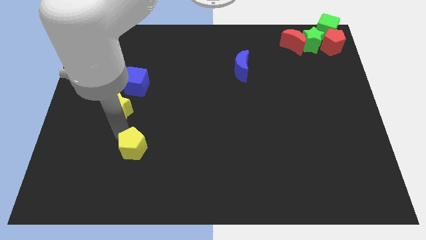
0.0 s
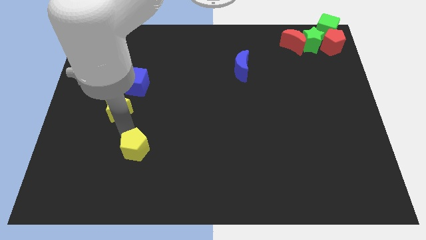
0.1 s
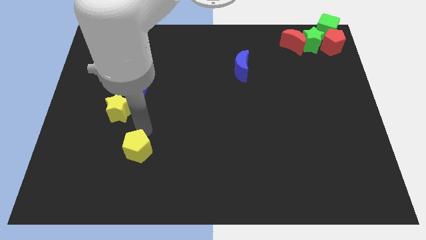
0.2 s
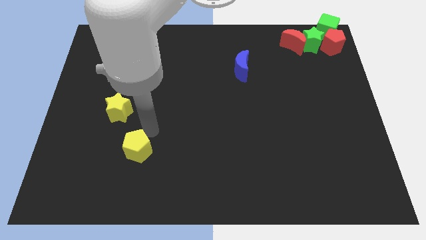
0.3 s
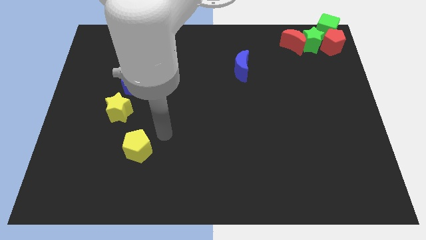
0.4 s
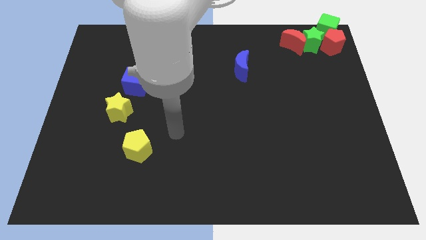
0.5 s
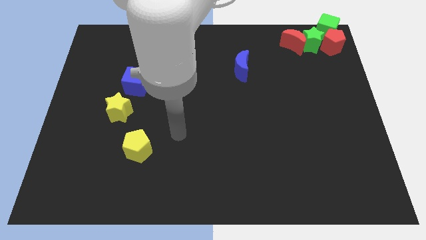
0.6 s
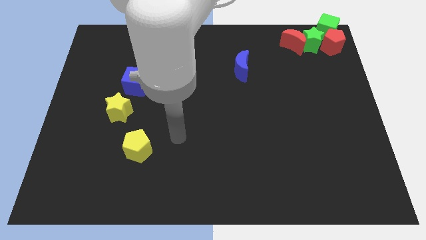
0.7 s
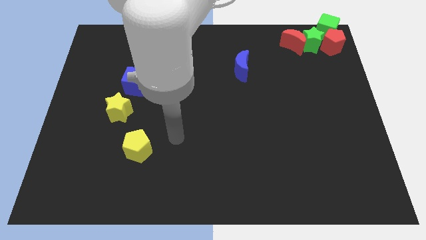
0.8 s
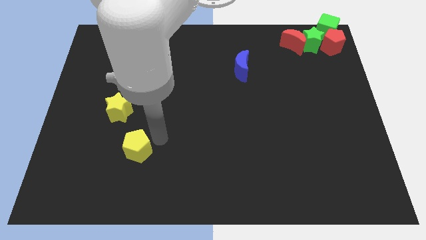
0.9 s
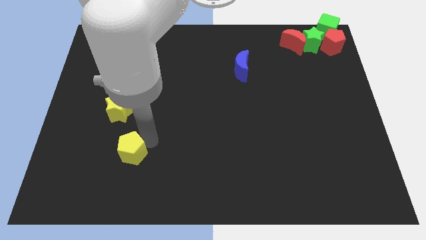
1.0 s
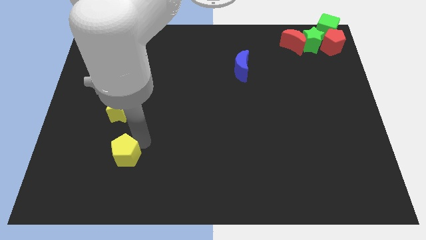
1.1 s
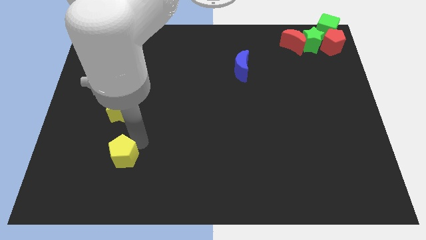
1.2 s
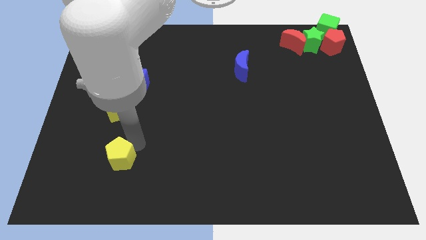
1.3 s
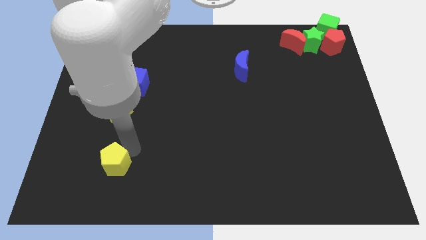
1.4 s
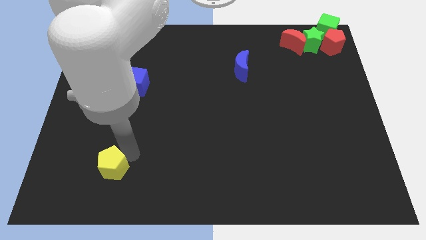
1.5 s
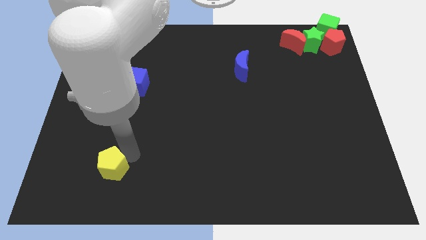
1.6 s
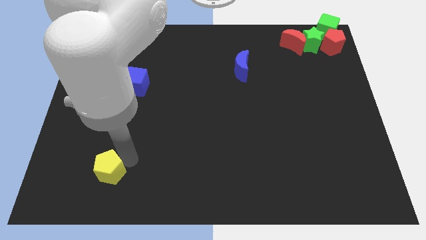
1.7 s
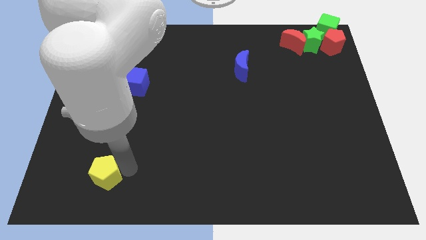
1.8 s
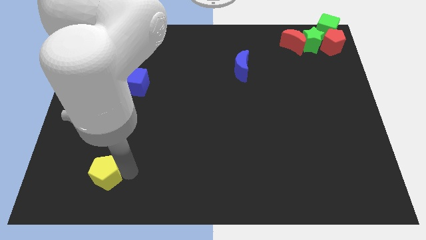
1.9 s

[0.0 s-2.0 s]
put the yellow pentagon vertically below the yellow star

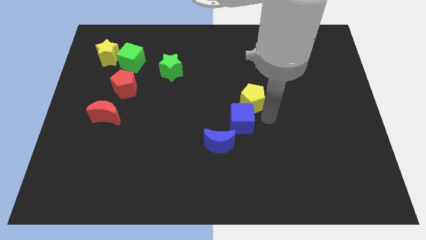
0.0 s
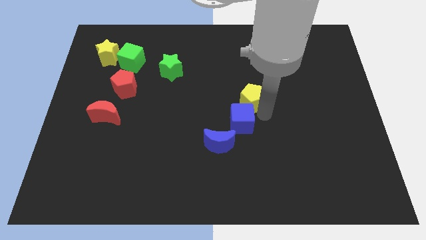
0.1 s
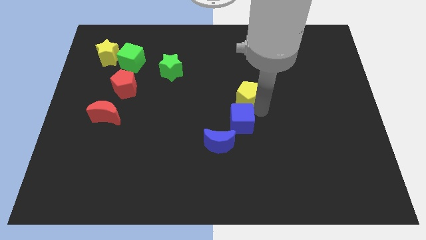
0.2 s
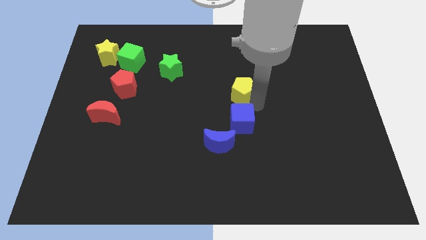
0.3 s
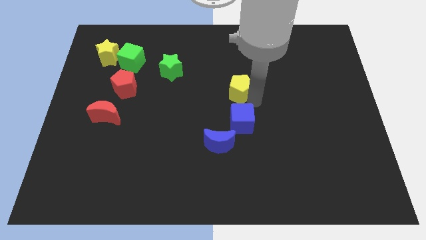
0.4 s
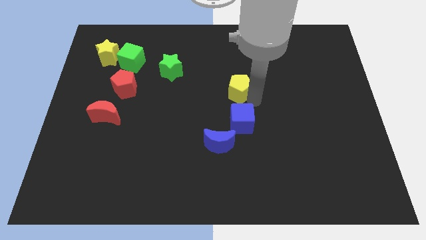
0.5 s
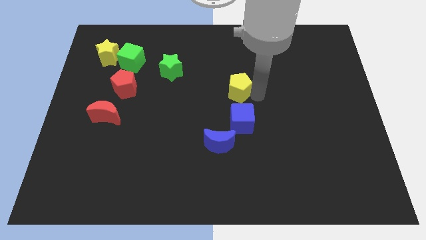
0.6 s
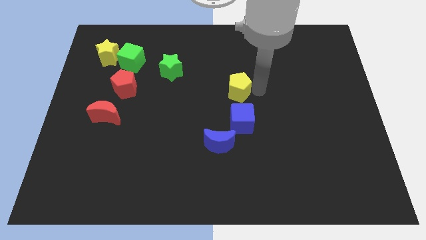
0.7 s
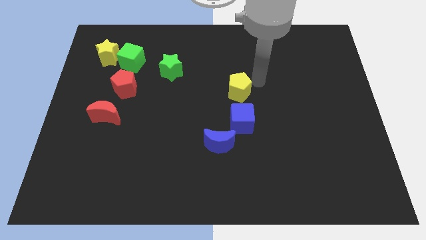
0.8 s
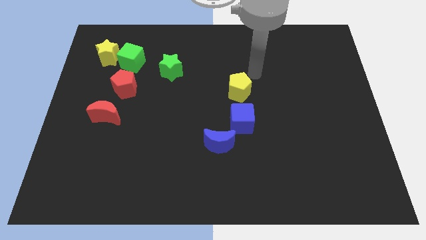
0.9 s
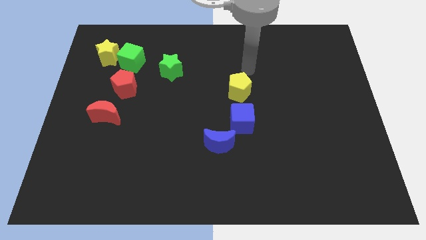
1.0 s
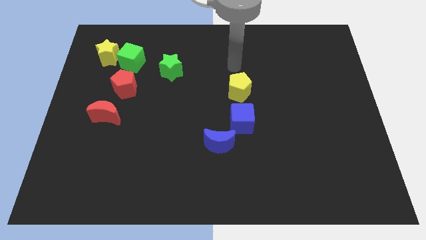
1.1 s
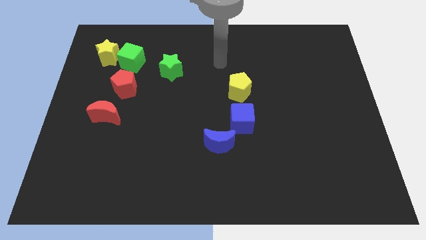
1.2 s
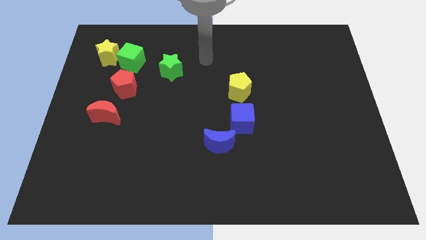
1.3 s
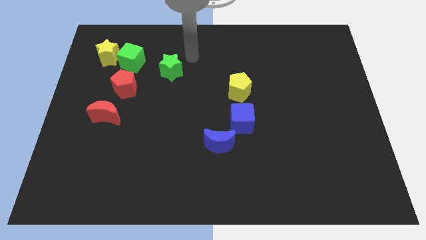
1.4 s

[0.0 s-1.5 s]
move the yellow pentagon to the center of the board

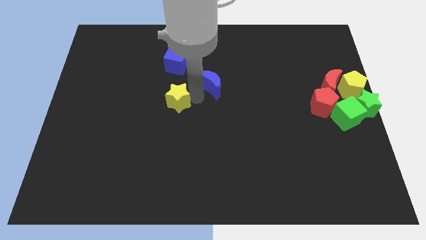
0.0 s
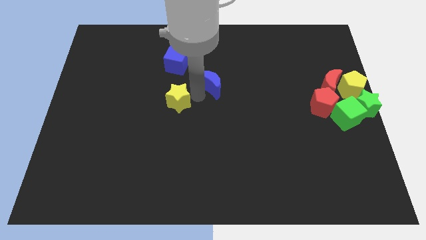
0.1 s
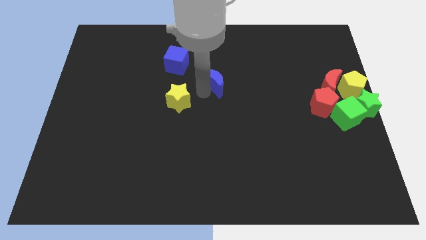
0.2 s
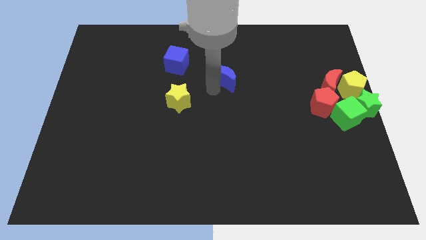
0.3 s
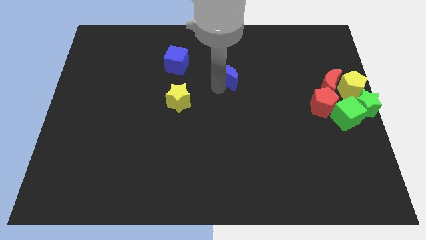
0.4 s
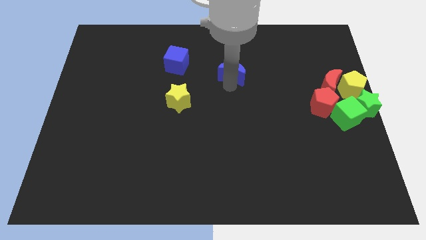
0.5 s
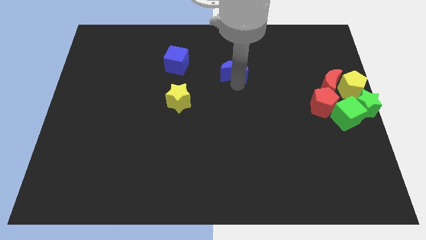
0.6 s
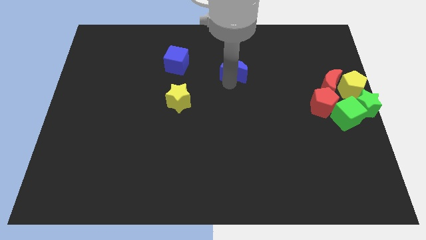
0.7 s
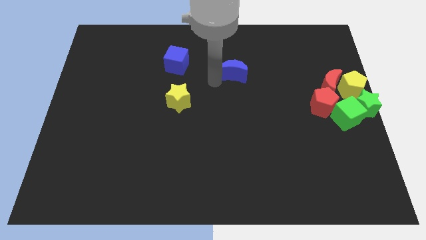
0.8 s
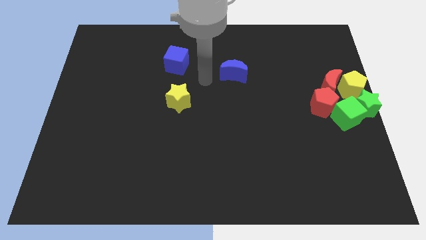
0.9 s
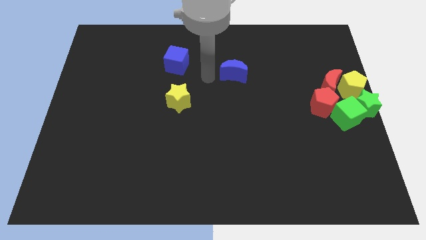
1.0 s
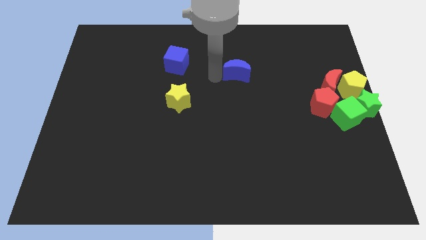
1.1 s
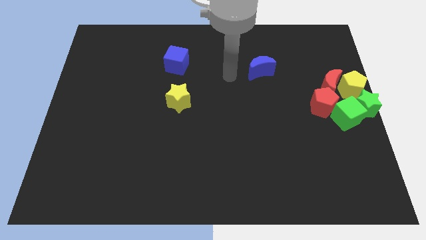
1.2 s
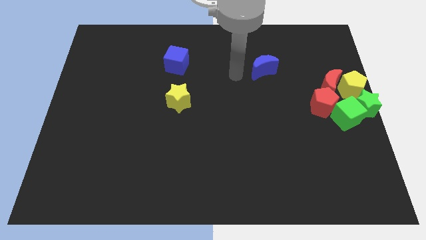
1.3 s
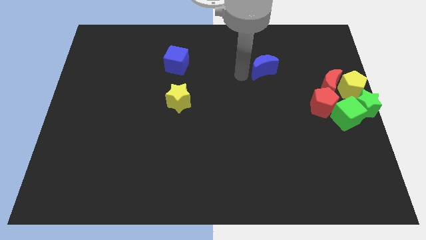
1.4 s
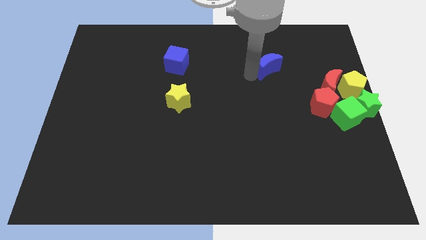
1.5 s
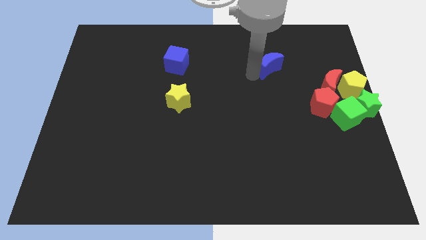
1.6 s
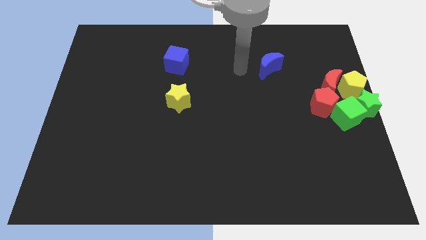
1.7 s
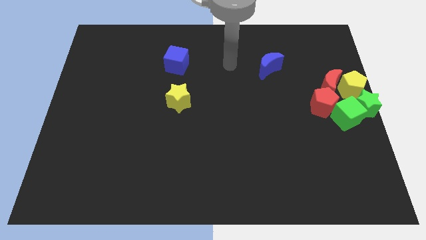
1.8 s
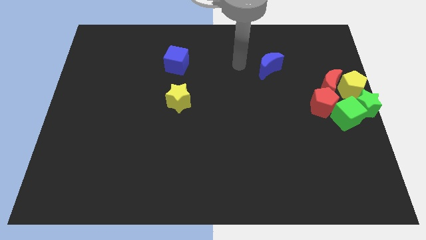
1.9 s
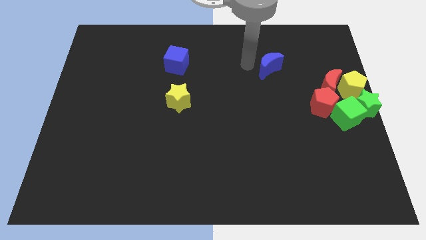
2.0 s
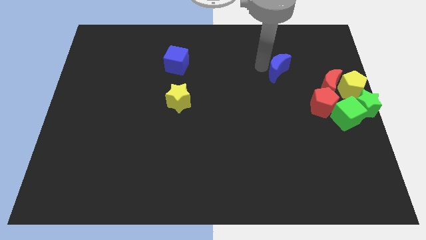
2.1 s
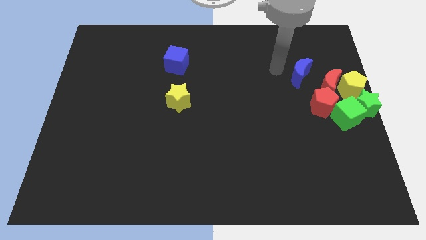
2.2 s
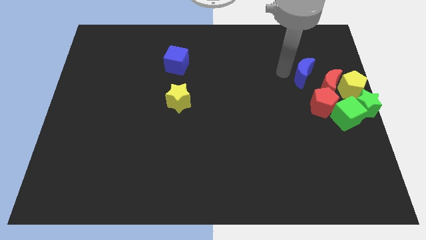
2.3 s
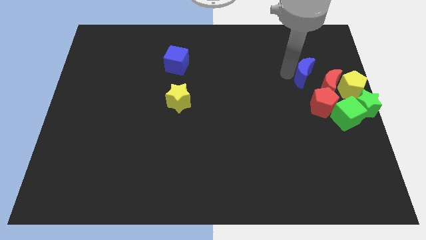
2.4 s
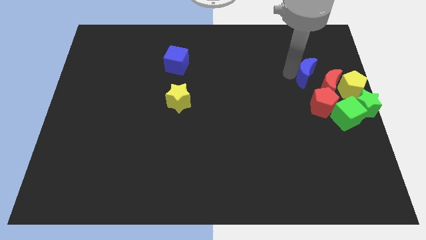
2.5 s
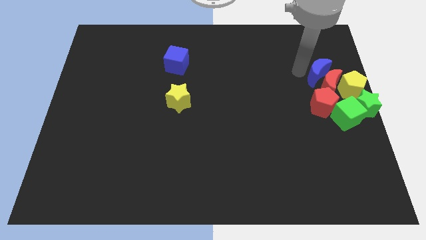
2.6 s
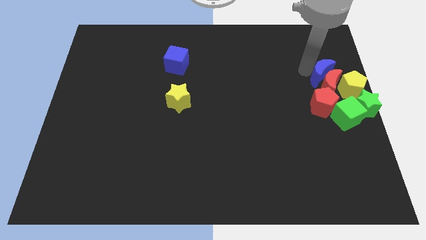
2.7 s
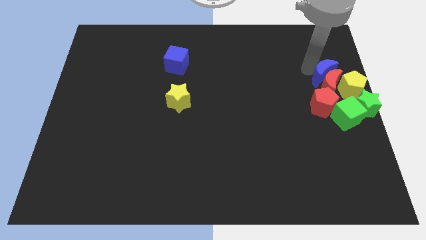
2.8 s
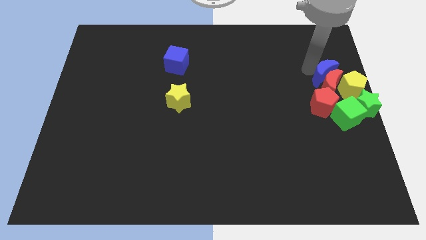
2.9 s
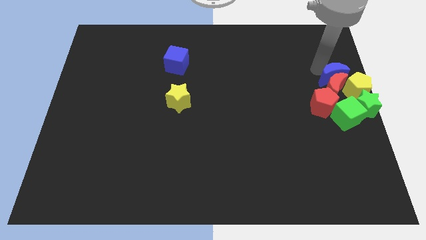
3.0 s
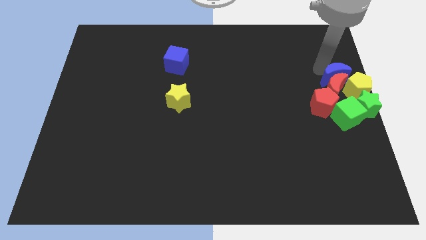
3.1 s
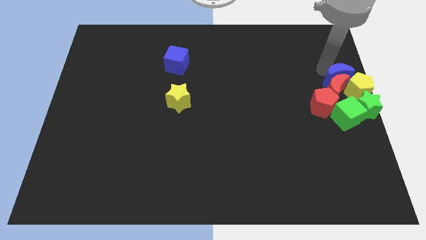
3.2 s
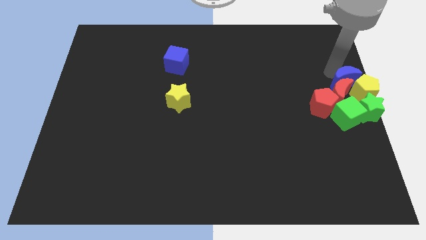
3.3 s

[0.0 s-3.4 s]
push the blue crescent into red crescent

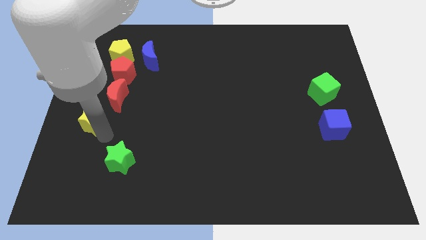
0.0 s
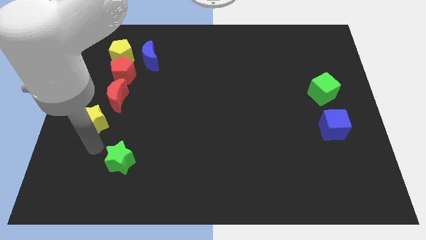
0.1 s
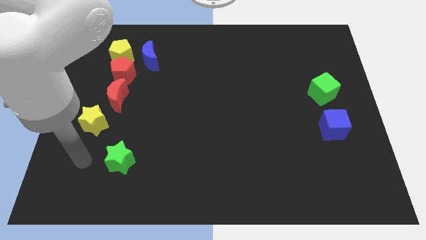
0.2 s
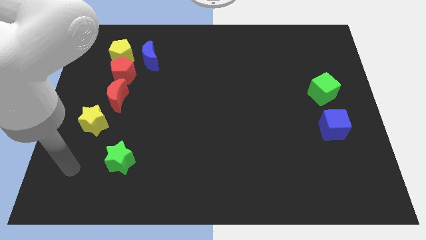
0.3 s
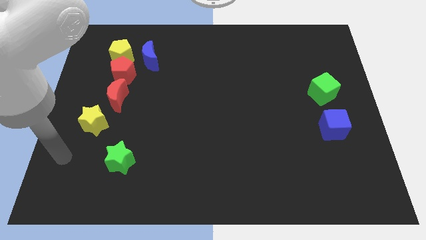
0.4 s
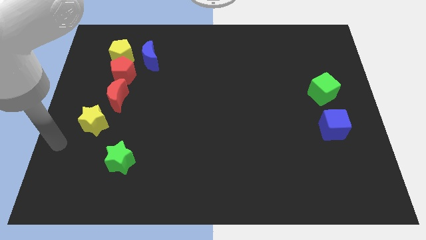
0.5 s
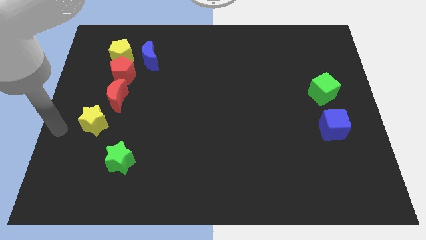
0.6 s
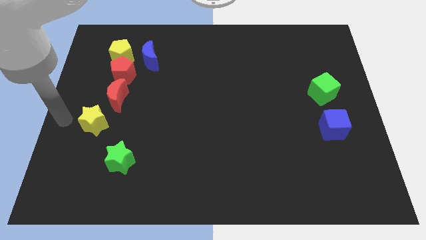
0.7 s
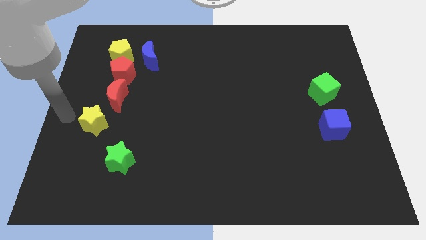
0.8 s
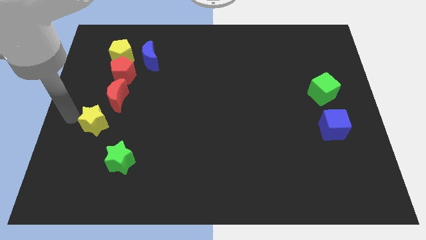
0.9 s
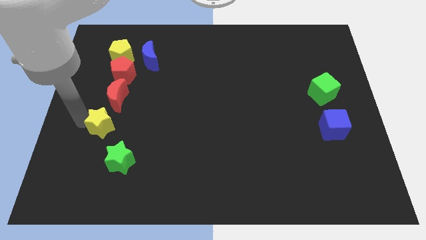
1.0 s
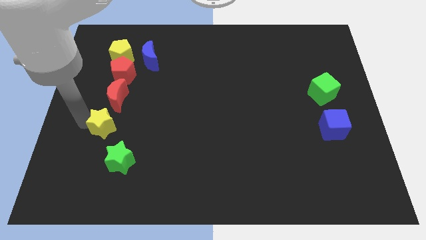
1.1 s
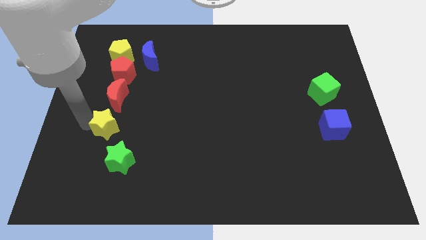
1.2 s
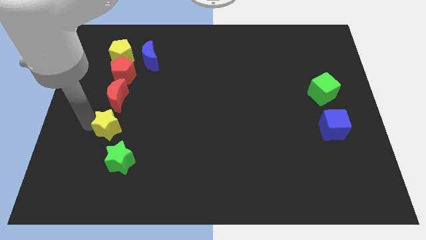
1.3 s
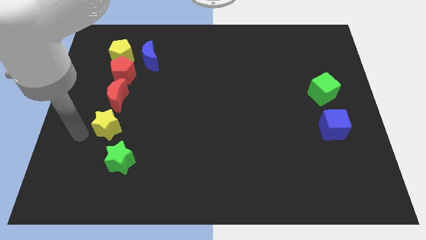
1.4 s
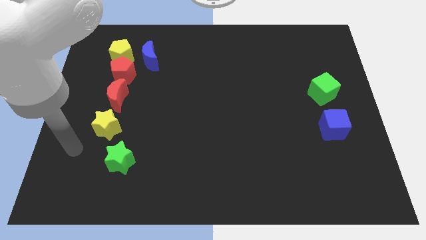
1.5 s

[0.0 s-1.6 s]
place yellow star in between red moon and green star

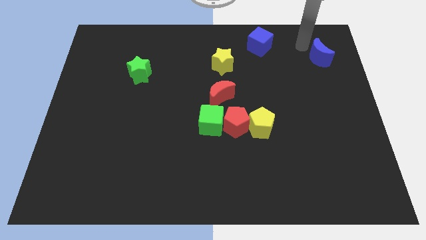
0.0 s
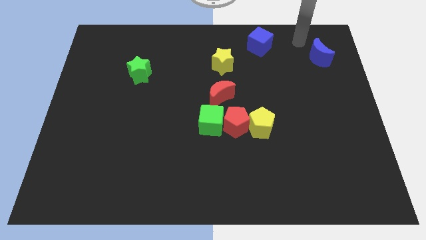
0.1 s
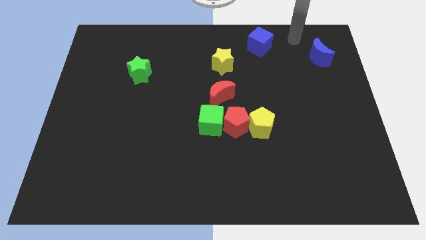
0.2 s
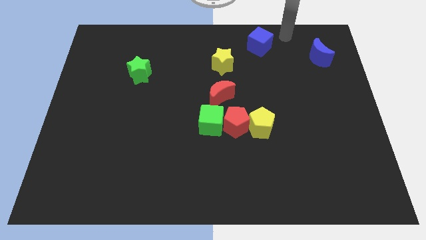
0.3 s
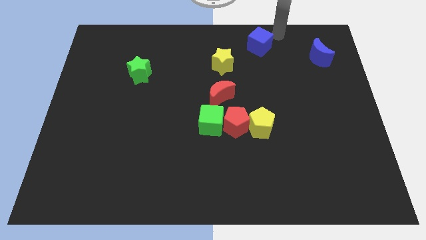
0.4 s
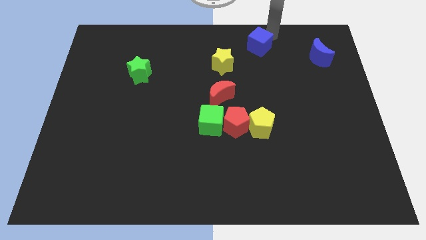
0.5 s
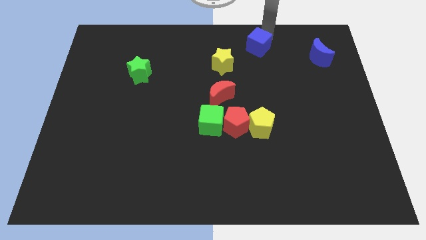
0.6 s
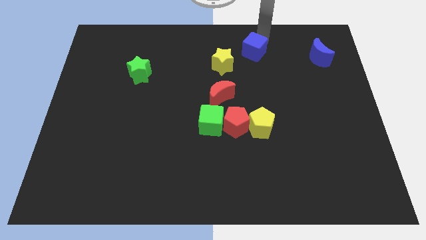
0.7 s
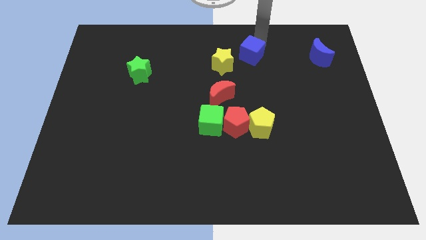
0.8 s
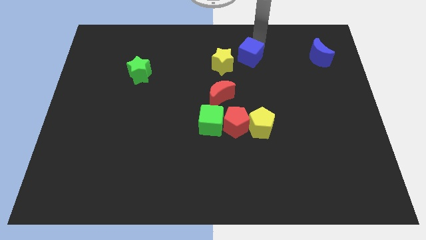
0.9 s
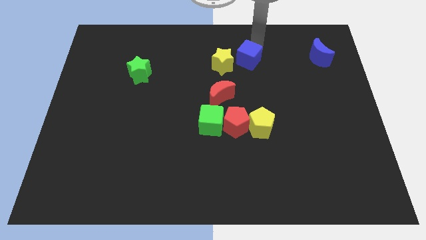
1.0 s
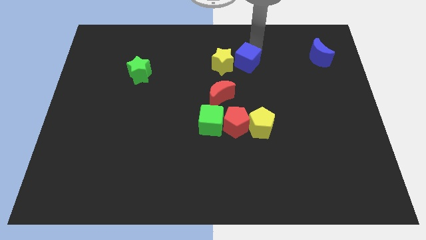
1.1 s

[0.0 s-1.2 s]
move the blue cube to the right of the yellow star
